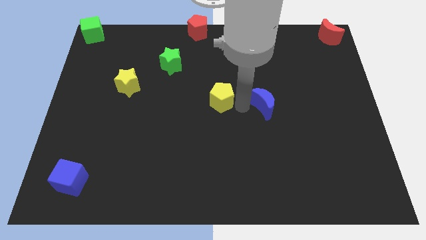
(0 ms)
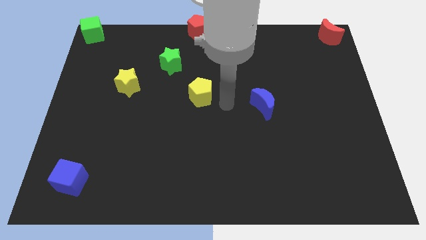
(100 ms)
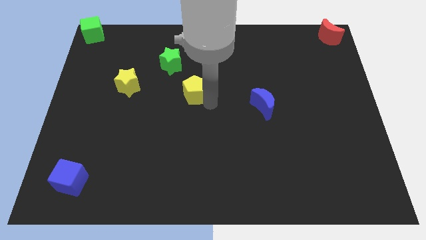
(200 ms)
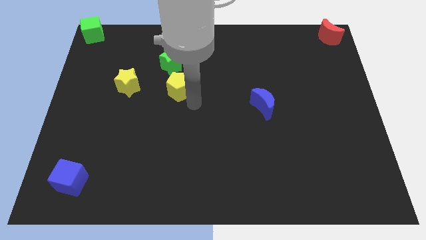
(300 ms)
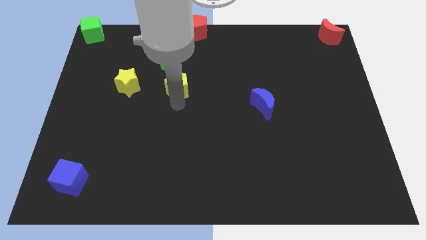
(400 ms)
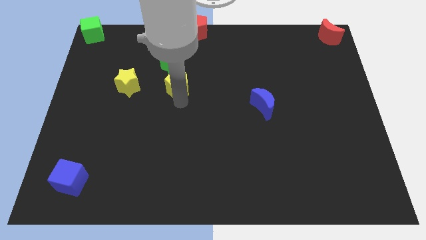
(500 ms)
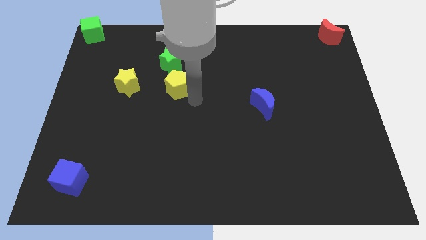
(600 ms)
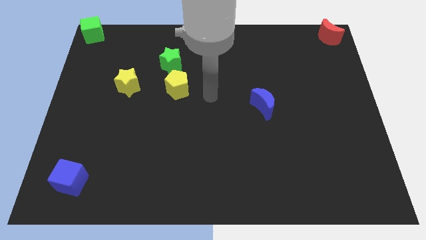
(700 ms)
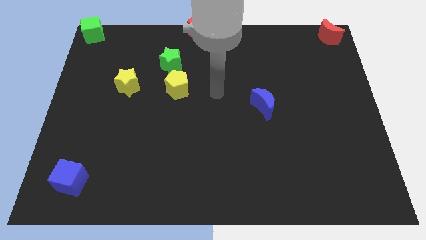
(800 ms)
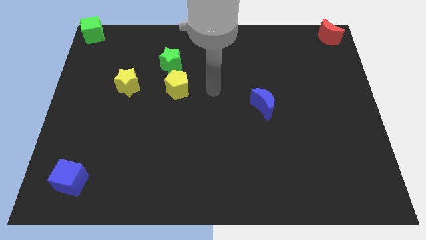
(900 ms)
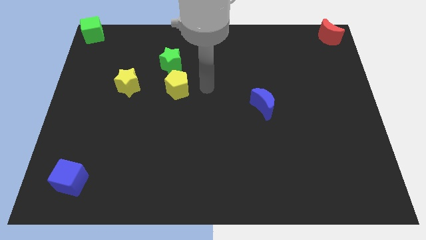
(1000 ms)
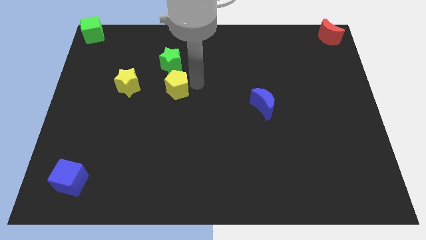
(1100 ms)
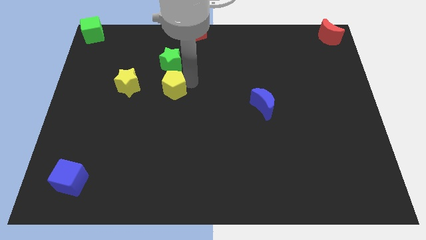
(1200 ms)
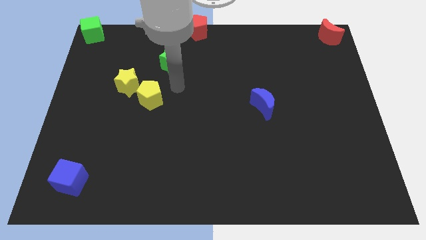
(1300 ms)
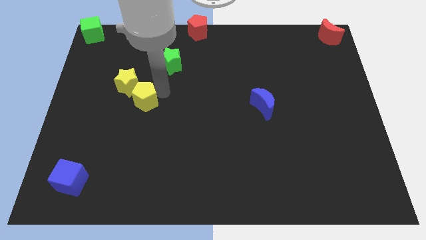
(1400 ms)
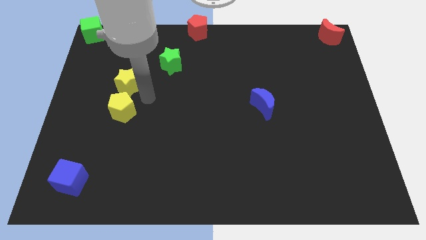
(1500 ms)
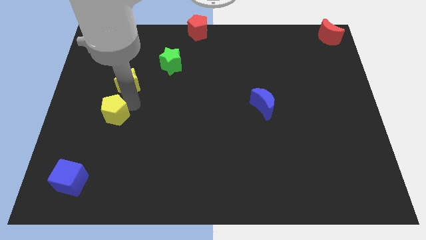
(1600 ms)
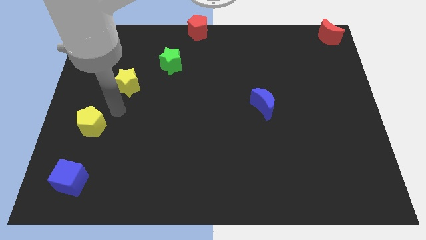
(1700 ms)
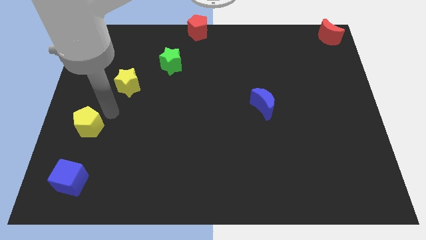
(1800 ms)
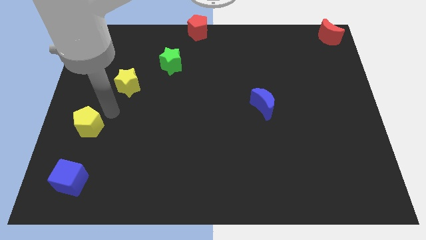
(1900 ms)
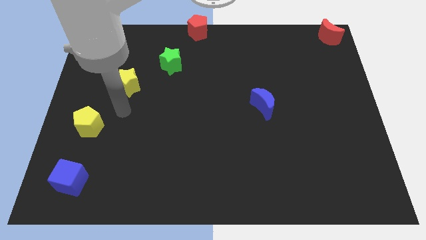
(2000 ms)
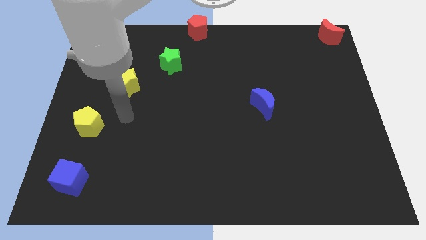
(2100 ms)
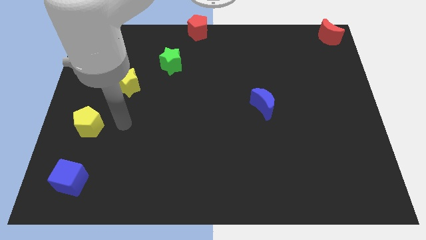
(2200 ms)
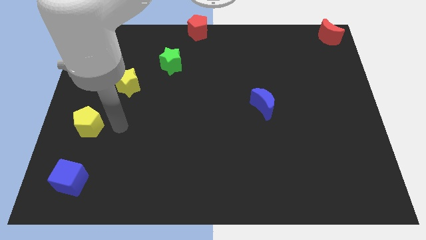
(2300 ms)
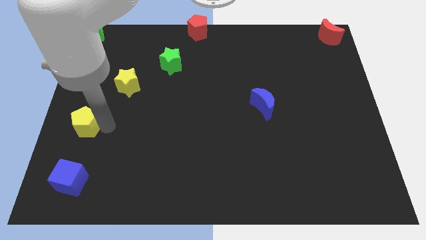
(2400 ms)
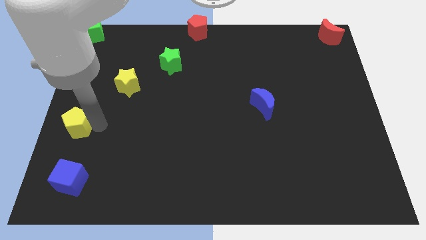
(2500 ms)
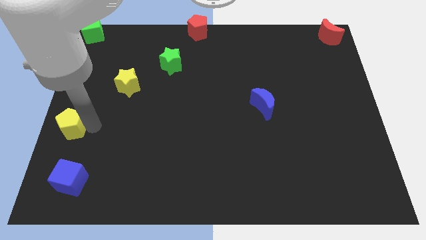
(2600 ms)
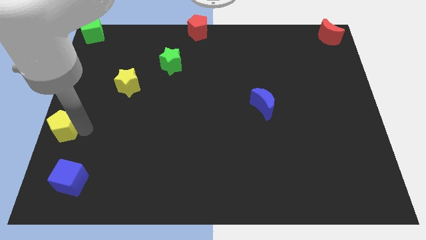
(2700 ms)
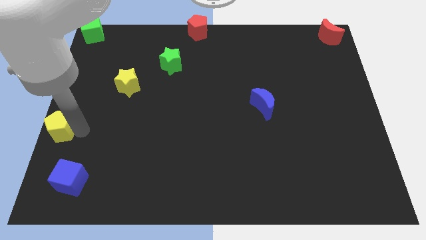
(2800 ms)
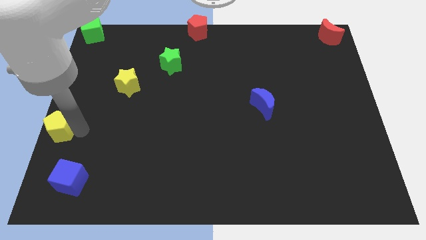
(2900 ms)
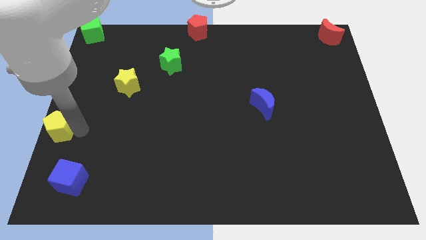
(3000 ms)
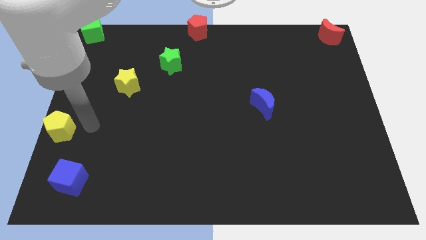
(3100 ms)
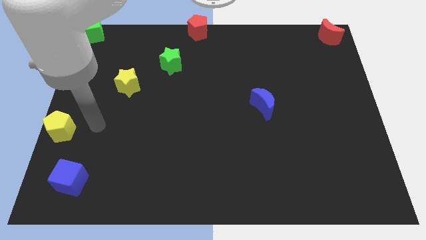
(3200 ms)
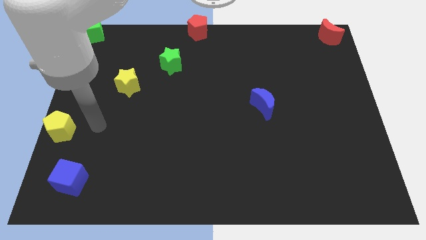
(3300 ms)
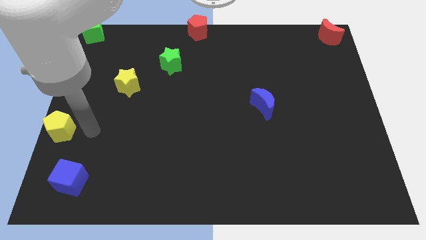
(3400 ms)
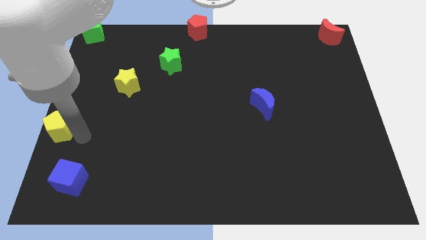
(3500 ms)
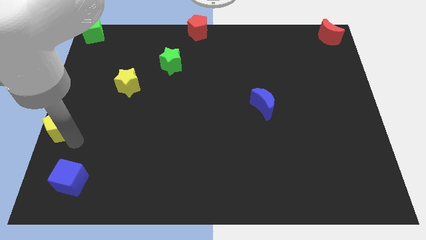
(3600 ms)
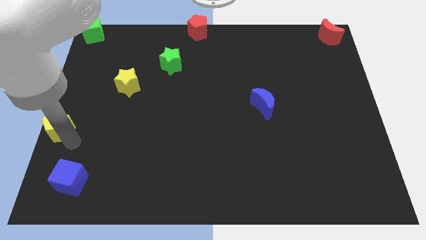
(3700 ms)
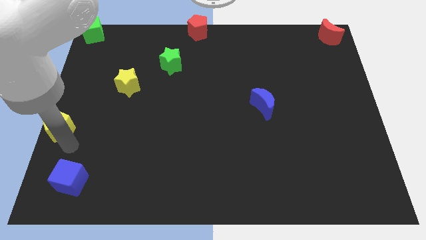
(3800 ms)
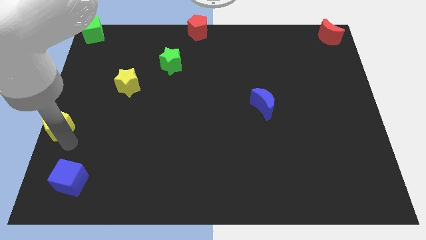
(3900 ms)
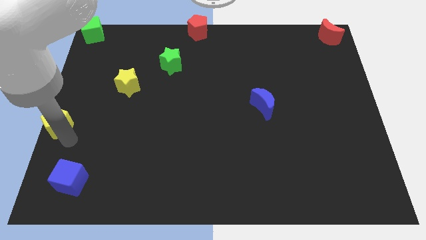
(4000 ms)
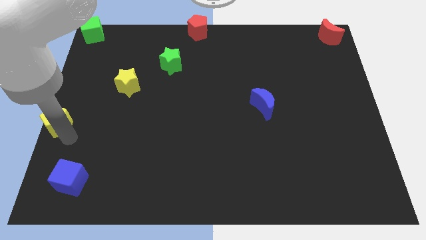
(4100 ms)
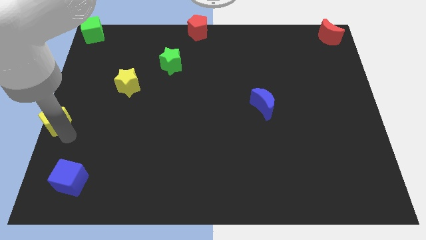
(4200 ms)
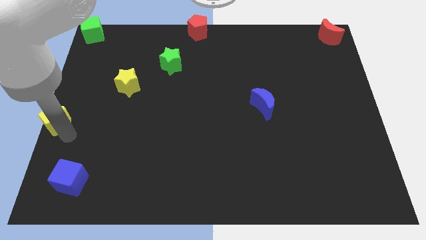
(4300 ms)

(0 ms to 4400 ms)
move the yellow pentagon to the centre left of the board

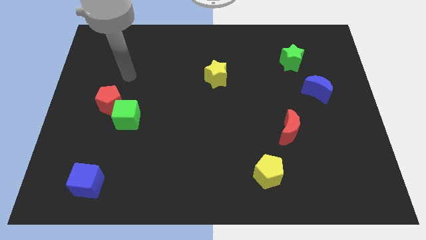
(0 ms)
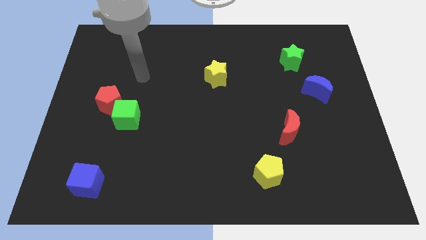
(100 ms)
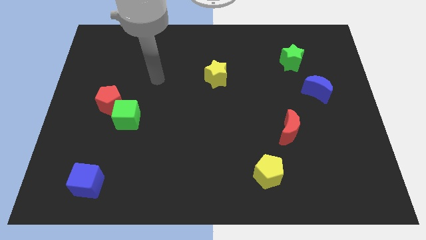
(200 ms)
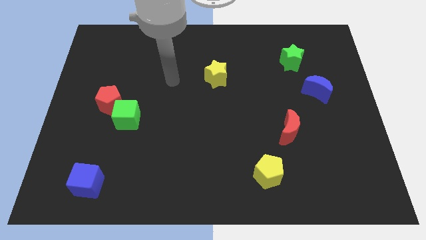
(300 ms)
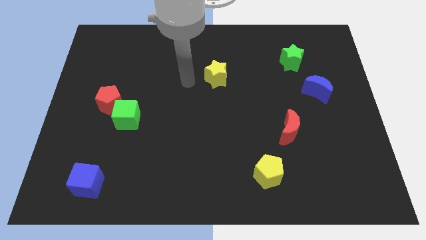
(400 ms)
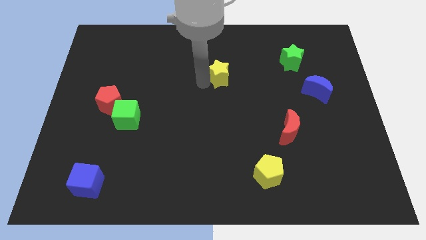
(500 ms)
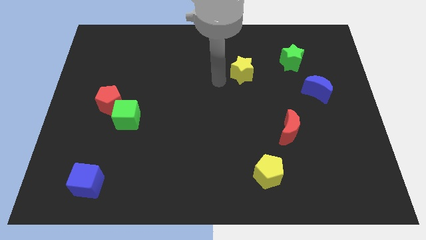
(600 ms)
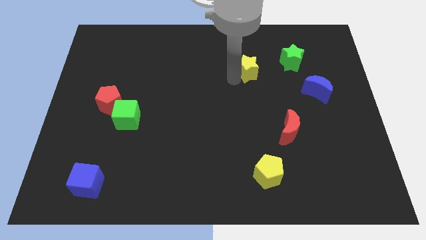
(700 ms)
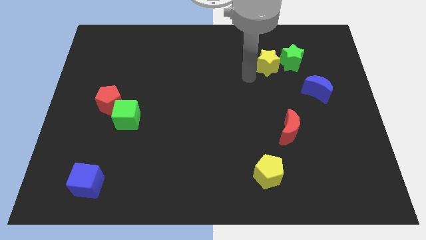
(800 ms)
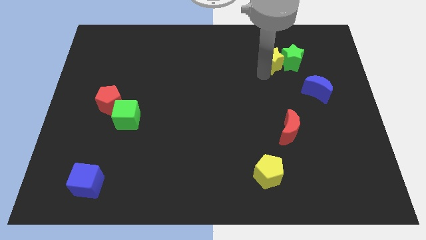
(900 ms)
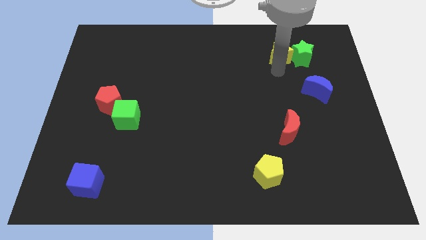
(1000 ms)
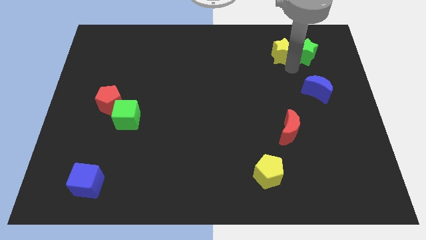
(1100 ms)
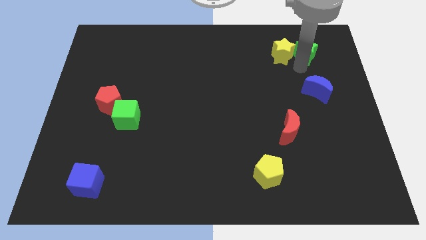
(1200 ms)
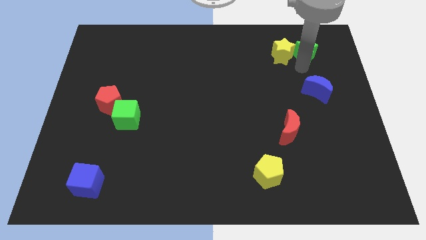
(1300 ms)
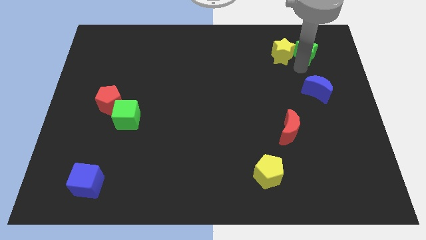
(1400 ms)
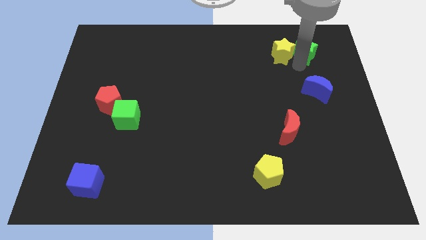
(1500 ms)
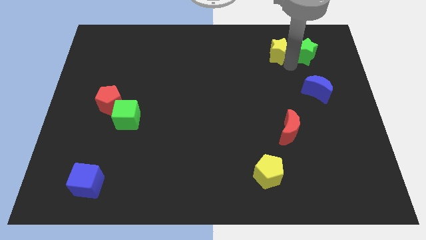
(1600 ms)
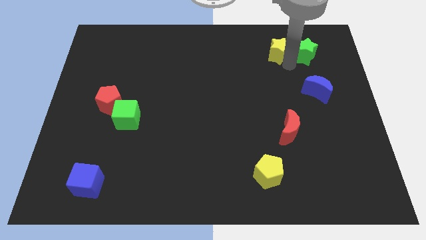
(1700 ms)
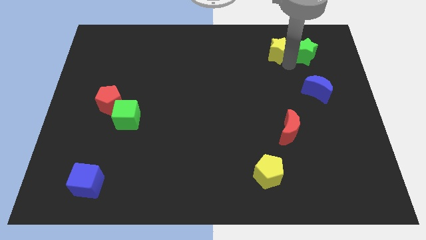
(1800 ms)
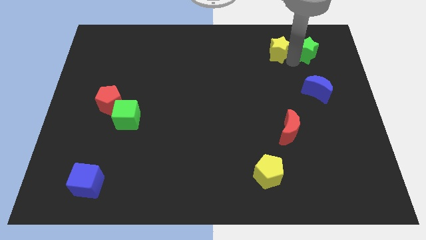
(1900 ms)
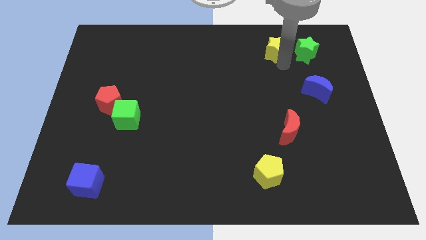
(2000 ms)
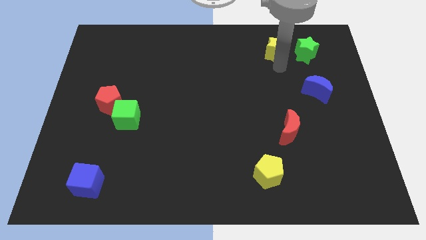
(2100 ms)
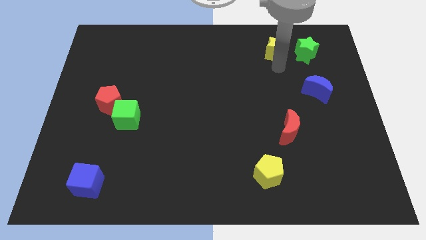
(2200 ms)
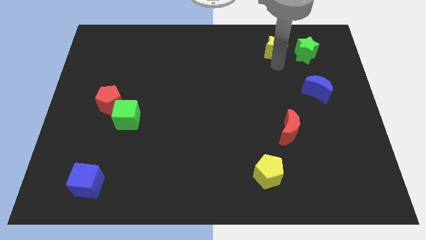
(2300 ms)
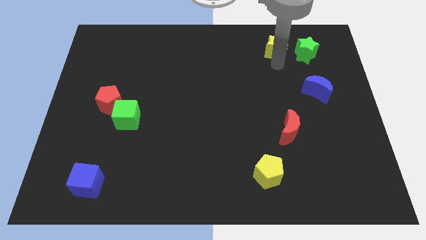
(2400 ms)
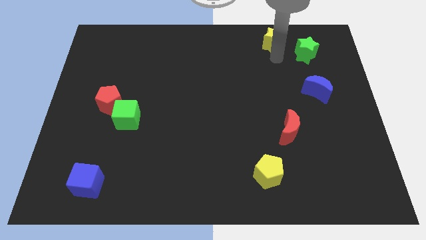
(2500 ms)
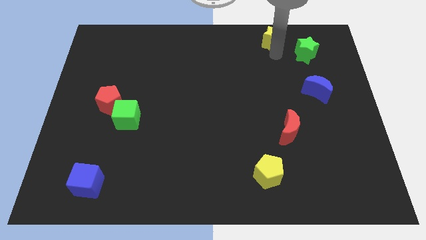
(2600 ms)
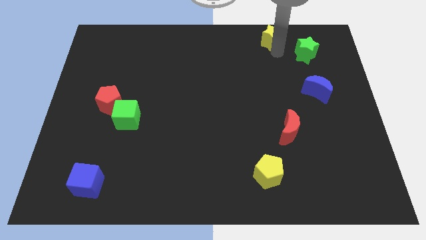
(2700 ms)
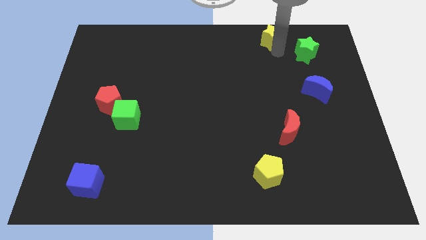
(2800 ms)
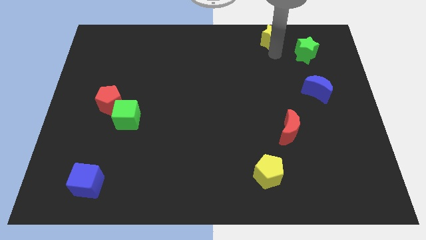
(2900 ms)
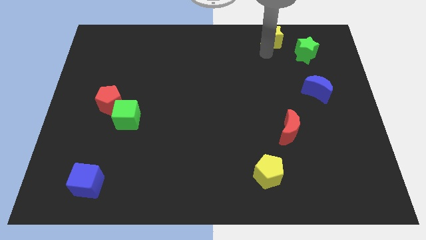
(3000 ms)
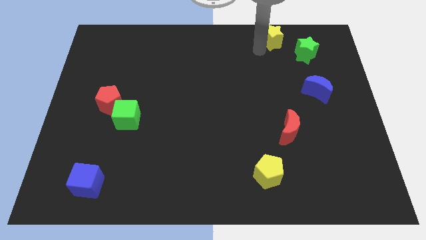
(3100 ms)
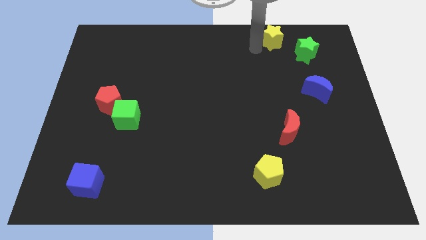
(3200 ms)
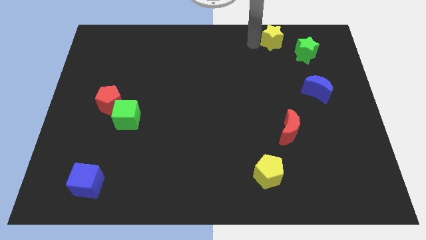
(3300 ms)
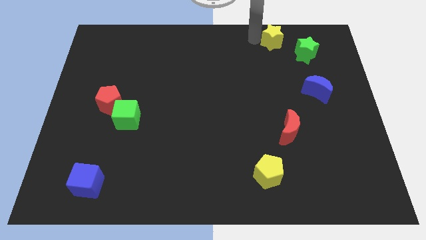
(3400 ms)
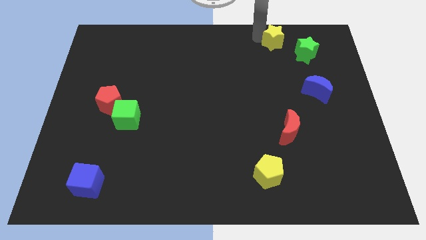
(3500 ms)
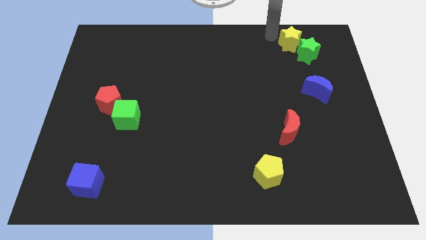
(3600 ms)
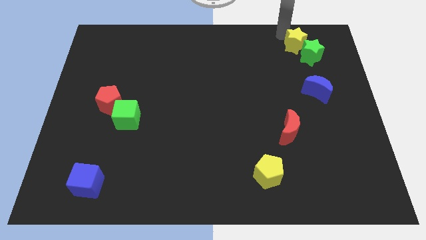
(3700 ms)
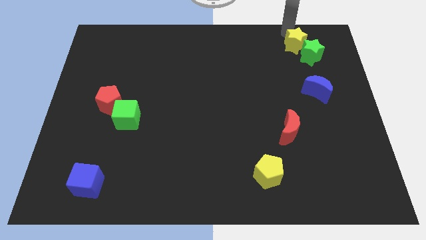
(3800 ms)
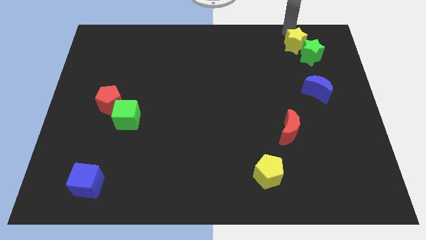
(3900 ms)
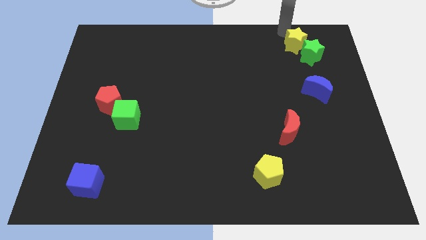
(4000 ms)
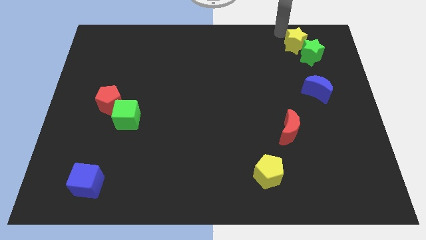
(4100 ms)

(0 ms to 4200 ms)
push the yellow star into green star

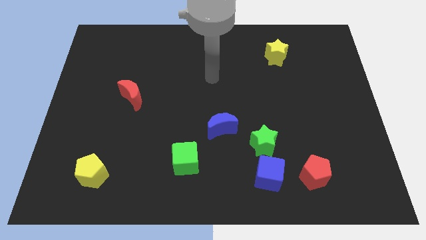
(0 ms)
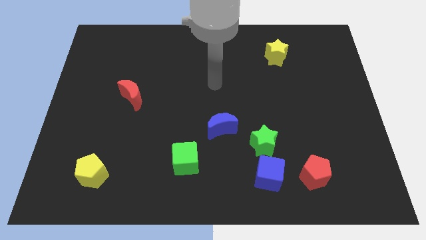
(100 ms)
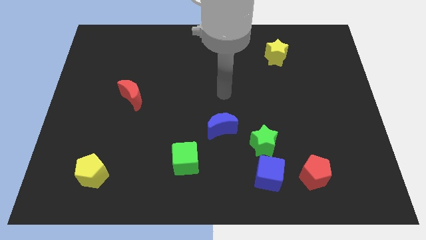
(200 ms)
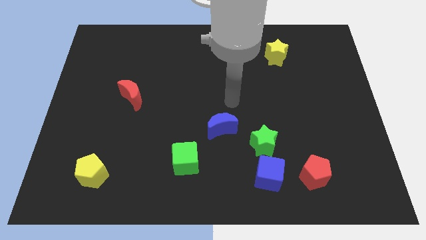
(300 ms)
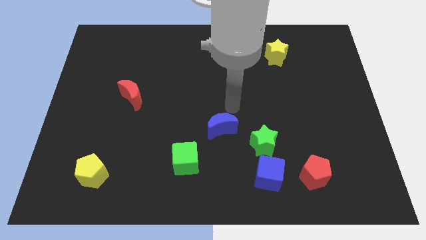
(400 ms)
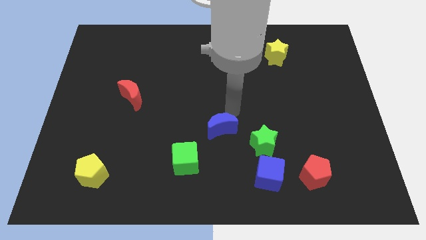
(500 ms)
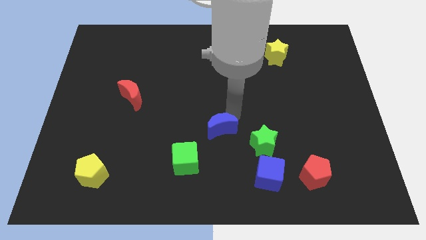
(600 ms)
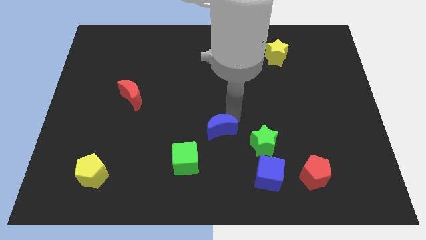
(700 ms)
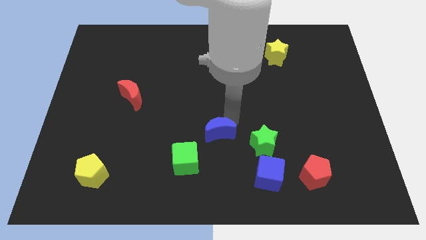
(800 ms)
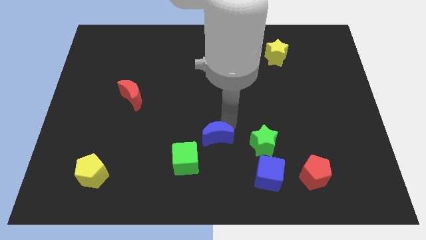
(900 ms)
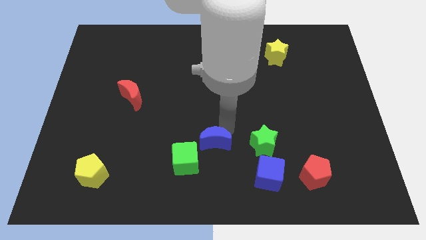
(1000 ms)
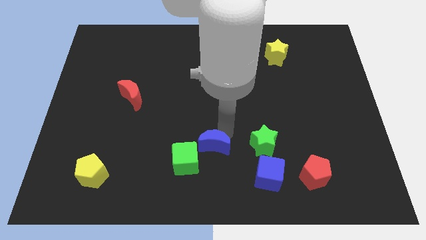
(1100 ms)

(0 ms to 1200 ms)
push the blue crescent towards down
